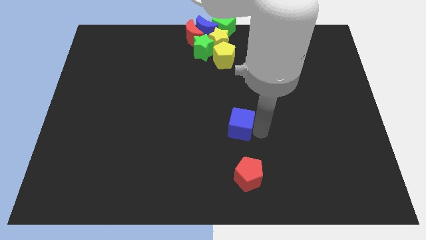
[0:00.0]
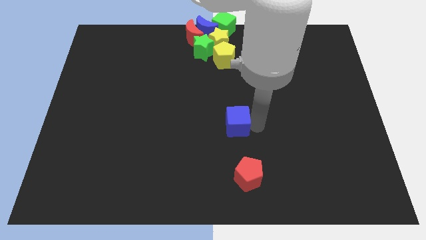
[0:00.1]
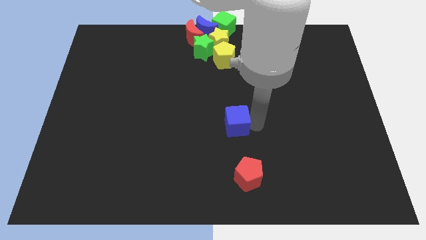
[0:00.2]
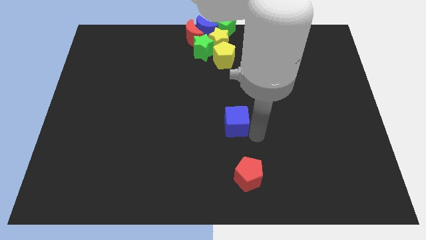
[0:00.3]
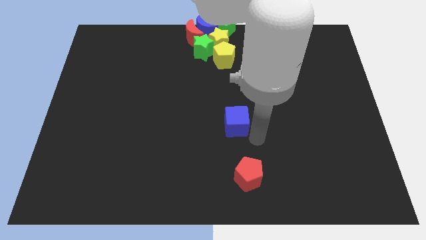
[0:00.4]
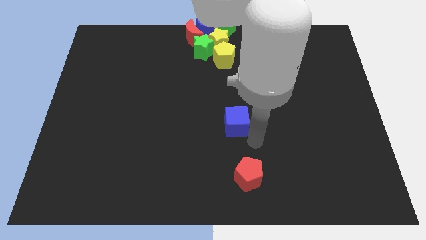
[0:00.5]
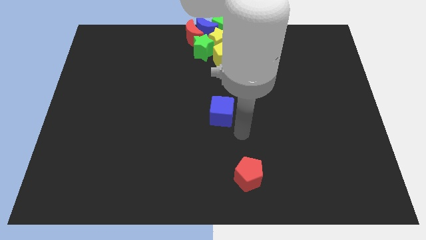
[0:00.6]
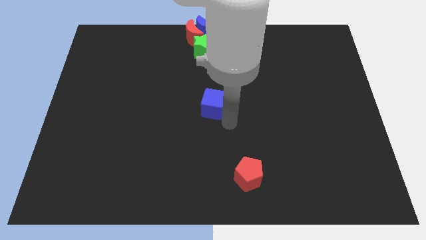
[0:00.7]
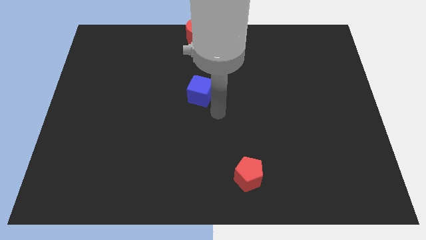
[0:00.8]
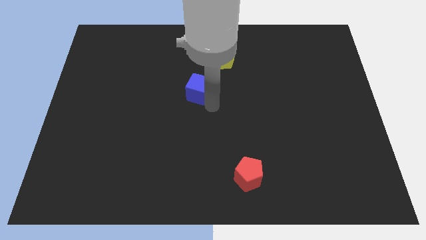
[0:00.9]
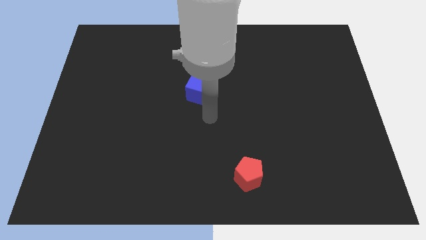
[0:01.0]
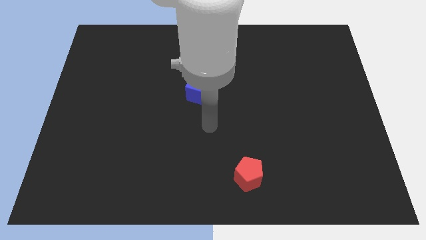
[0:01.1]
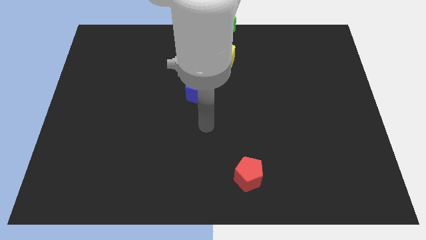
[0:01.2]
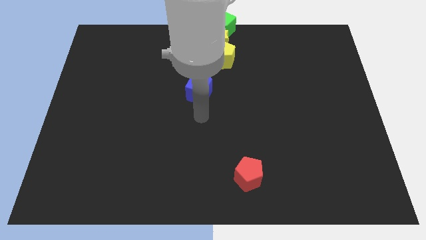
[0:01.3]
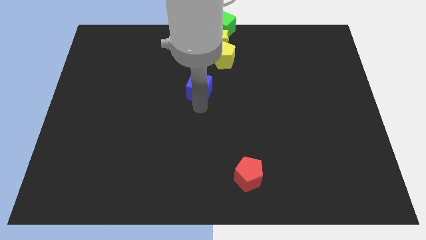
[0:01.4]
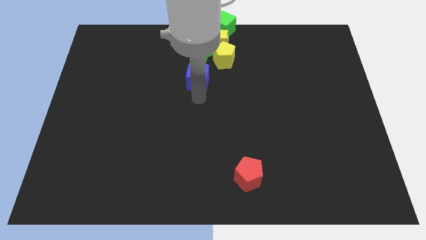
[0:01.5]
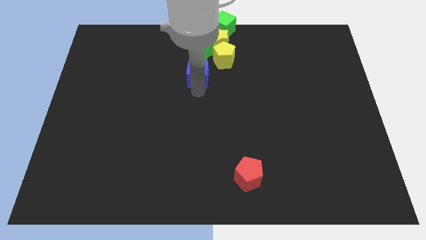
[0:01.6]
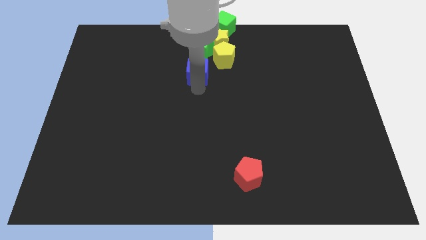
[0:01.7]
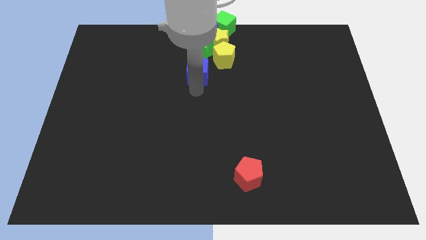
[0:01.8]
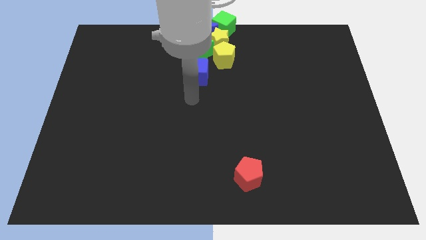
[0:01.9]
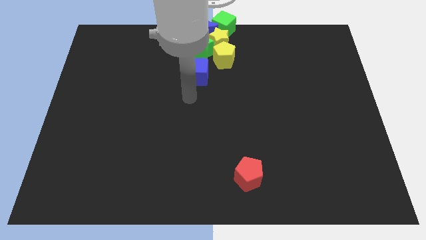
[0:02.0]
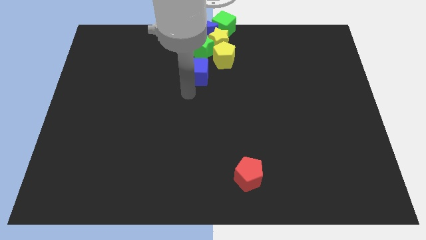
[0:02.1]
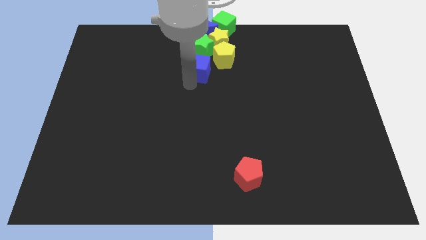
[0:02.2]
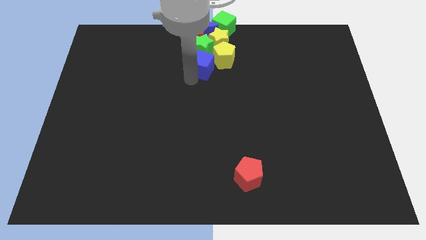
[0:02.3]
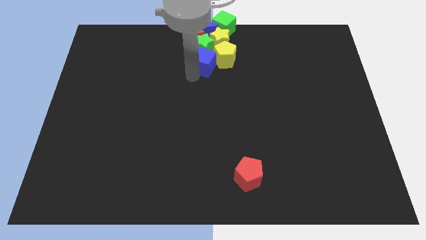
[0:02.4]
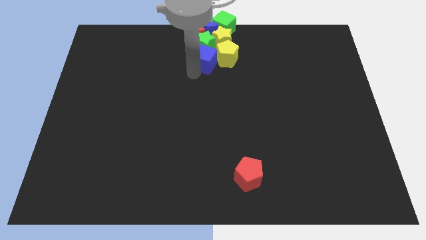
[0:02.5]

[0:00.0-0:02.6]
put the blue cube to the left side of yellow pentagon

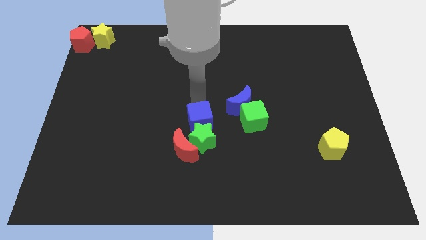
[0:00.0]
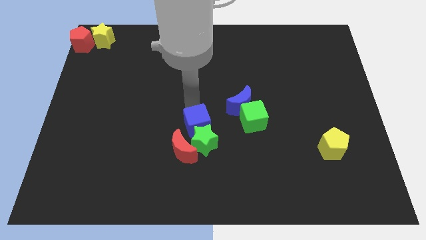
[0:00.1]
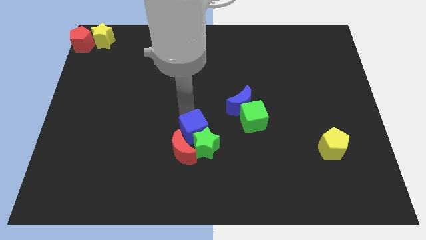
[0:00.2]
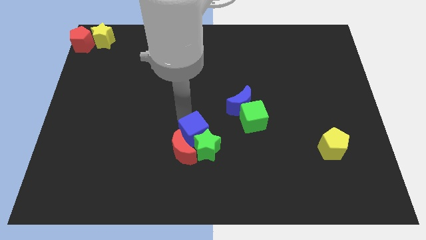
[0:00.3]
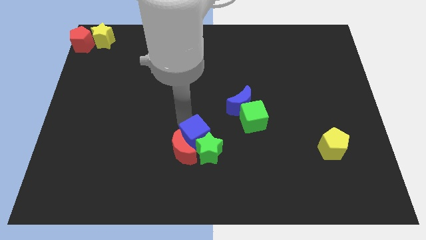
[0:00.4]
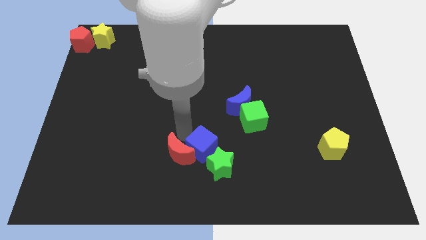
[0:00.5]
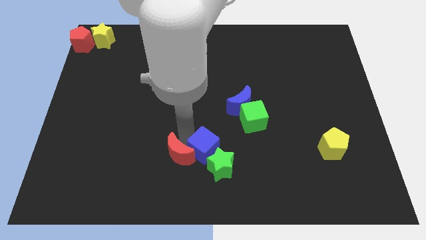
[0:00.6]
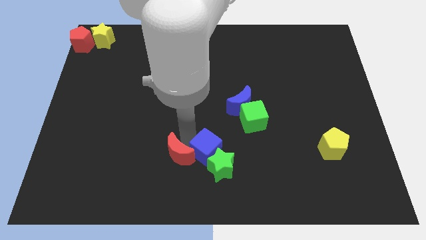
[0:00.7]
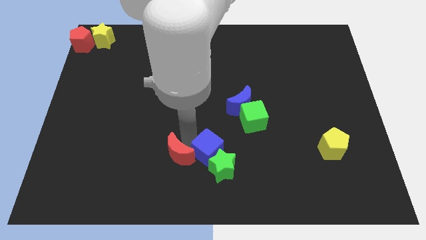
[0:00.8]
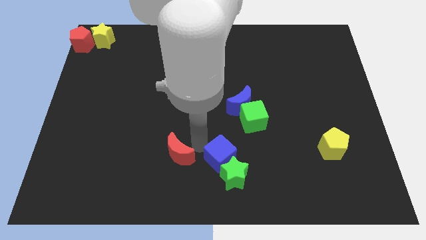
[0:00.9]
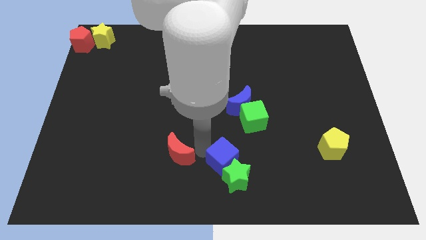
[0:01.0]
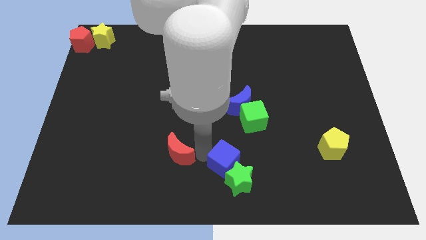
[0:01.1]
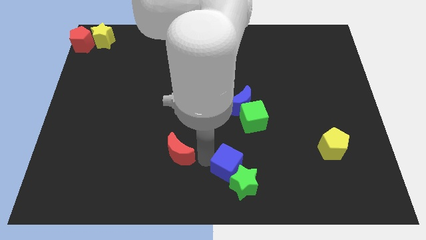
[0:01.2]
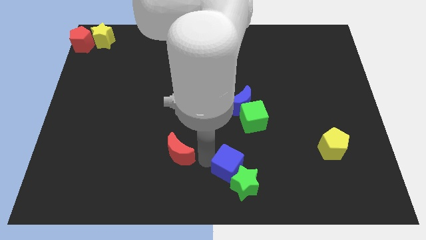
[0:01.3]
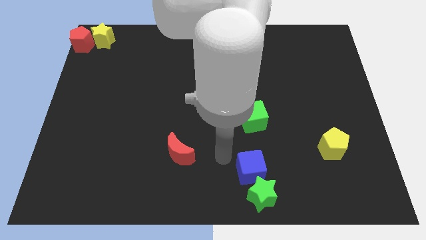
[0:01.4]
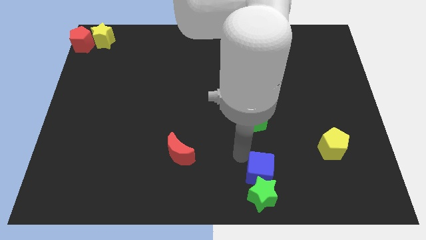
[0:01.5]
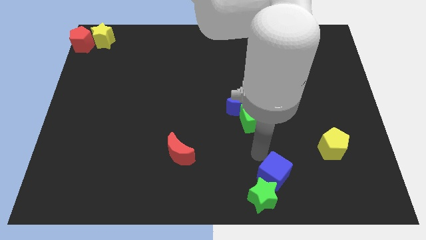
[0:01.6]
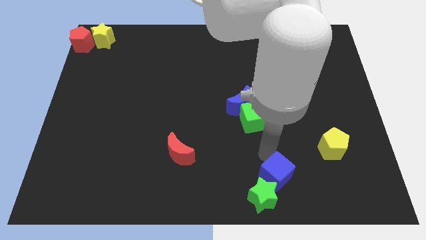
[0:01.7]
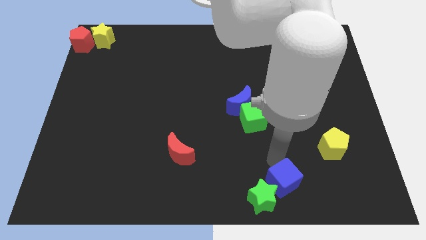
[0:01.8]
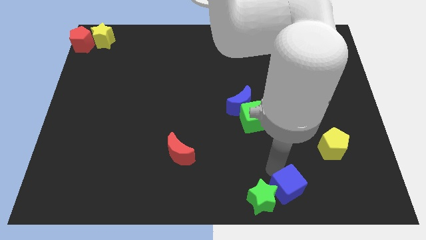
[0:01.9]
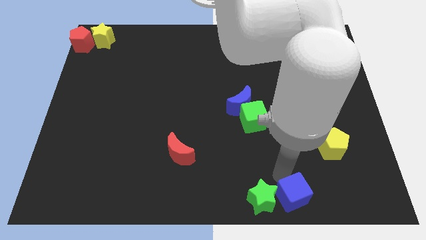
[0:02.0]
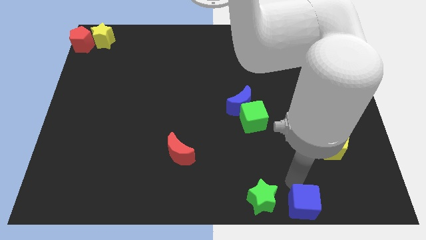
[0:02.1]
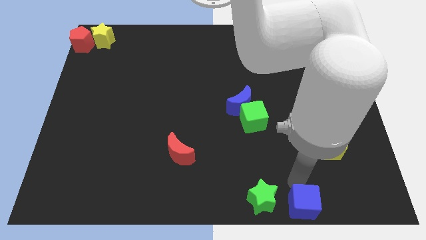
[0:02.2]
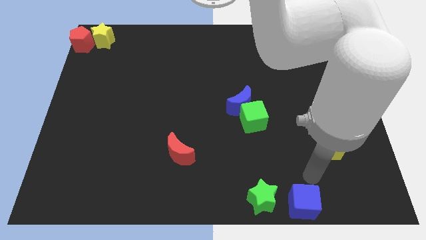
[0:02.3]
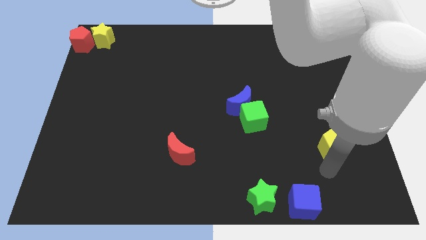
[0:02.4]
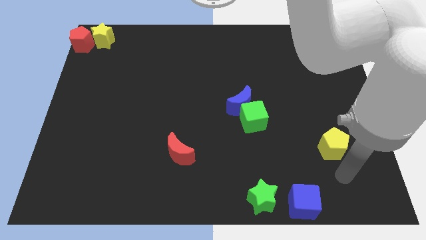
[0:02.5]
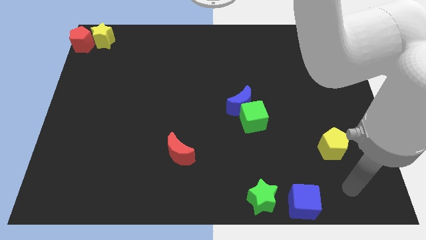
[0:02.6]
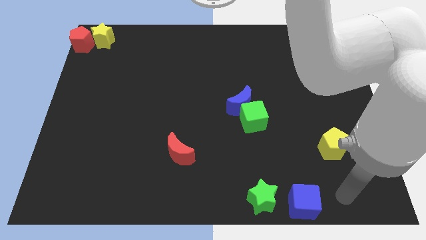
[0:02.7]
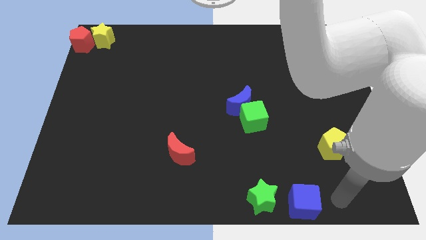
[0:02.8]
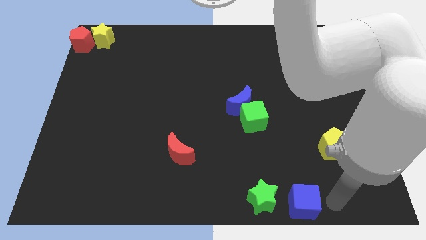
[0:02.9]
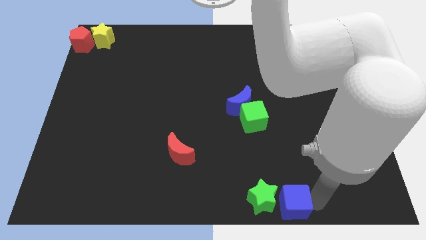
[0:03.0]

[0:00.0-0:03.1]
put the green star and blue cube in a horizontal line at the bottom right of the board

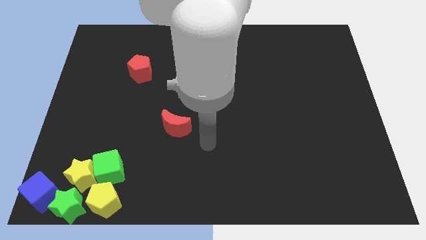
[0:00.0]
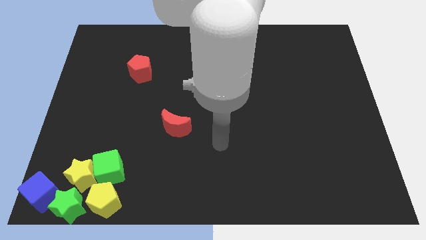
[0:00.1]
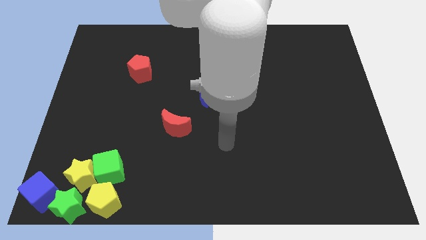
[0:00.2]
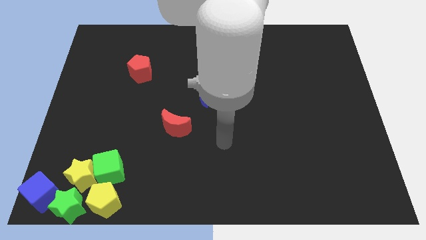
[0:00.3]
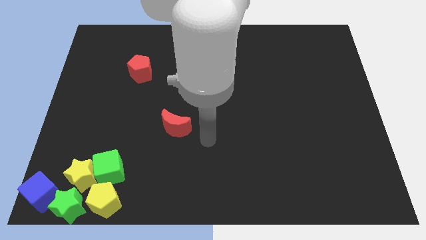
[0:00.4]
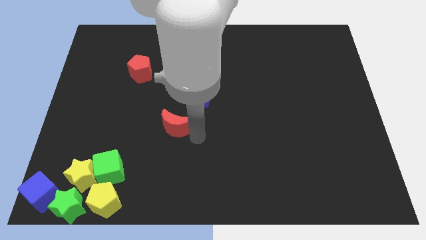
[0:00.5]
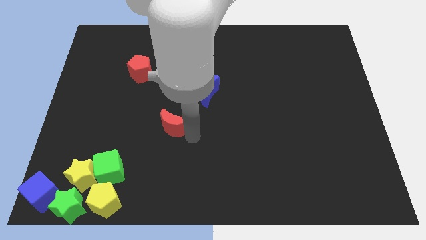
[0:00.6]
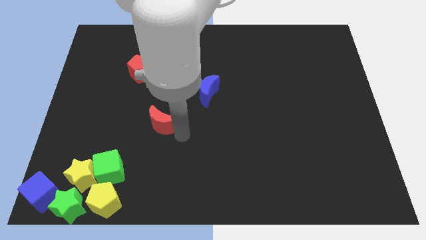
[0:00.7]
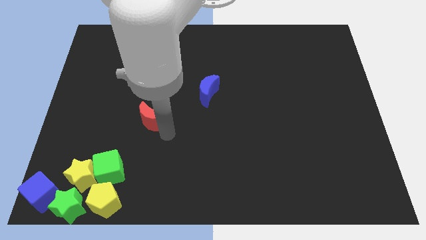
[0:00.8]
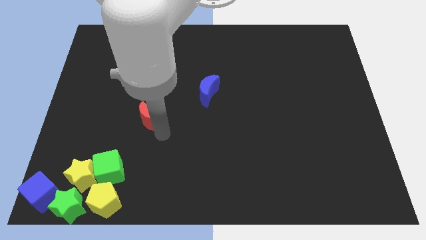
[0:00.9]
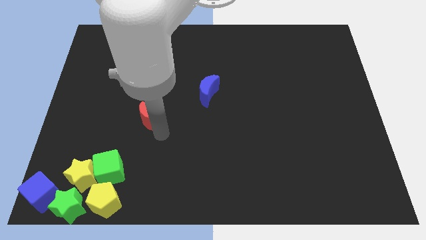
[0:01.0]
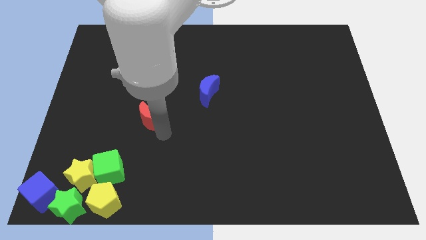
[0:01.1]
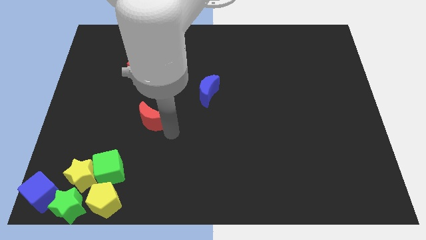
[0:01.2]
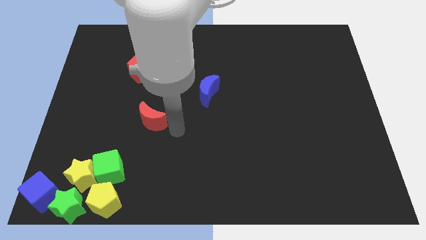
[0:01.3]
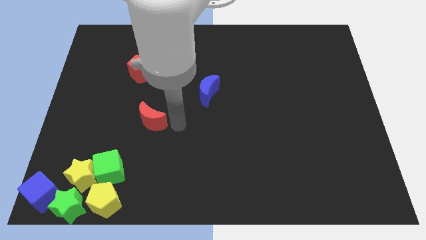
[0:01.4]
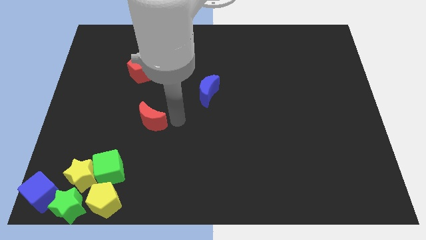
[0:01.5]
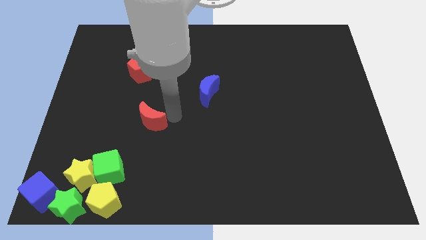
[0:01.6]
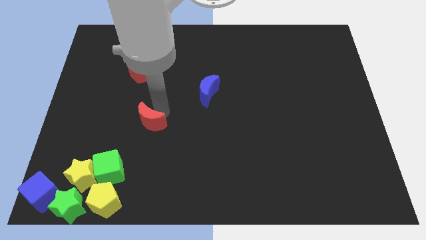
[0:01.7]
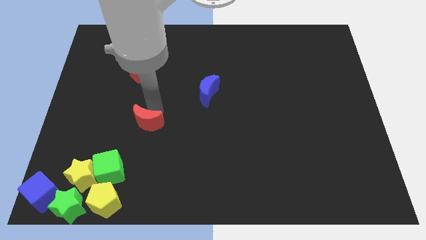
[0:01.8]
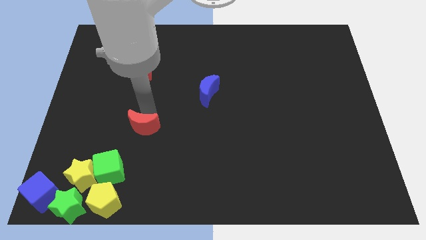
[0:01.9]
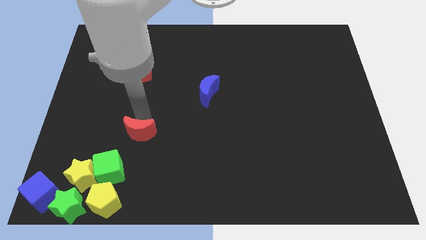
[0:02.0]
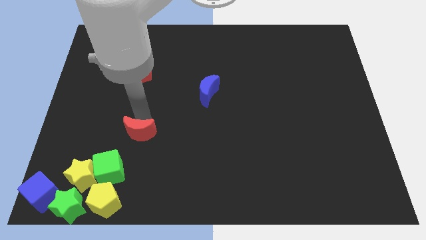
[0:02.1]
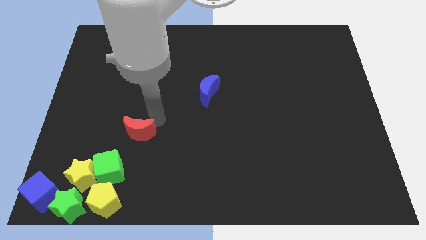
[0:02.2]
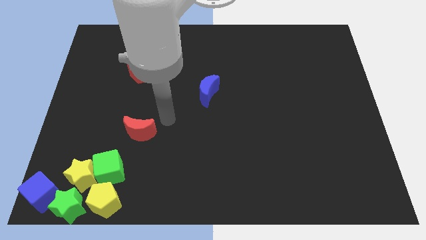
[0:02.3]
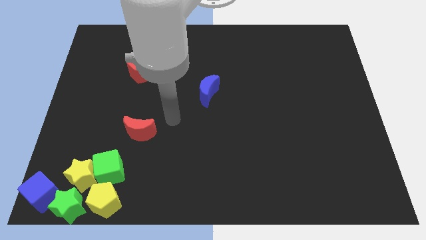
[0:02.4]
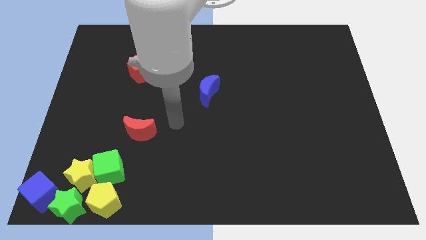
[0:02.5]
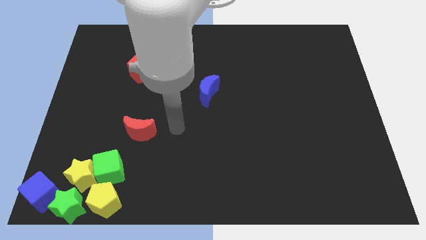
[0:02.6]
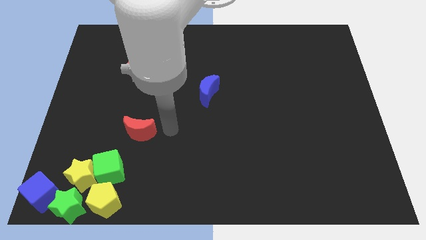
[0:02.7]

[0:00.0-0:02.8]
put the red crescent below the red pentagon

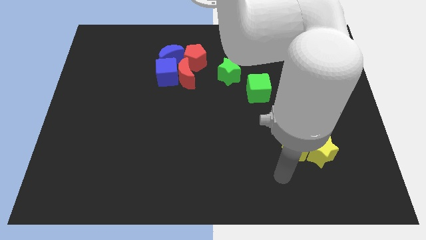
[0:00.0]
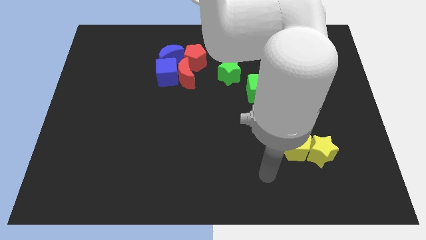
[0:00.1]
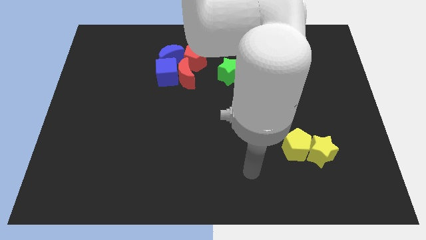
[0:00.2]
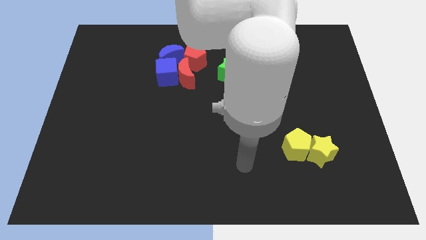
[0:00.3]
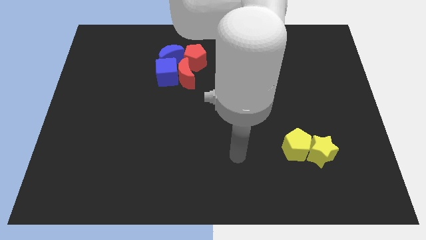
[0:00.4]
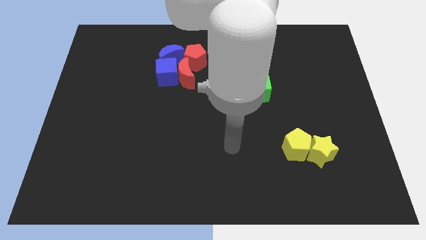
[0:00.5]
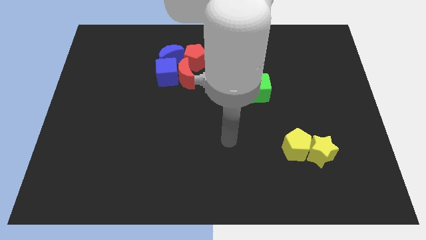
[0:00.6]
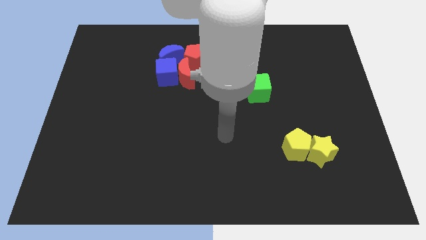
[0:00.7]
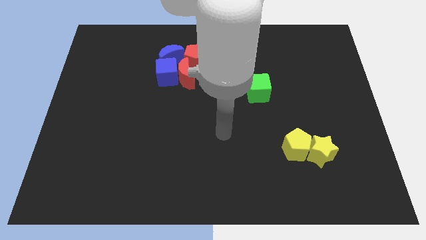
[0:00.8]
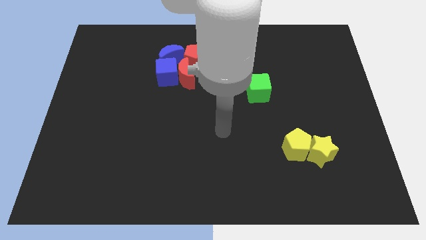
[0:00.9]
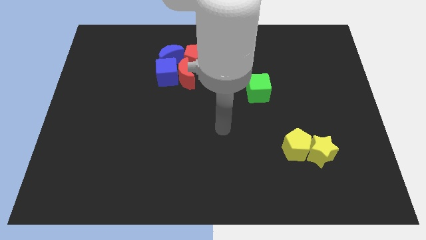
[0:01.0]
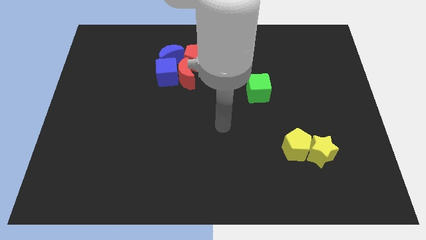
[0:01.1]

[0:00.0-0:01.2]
move your arm to the center
